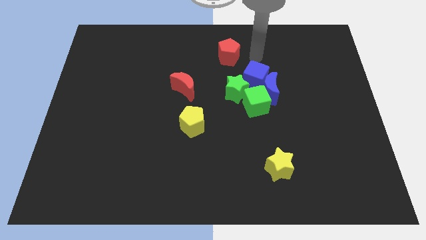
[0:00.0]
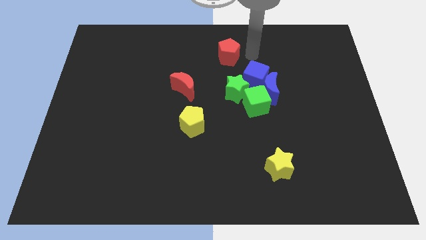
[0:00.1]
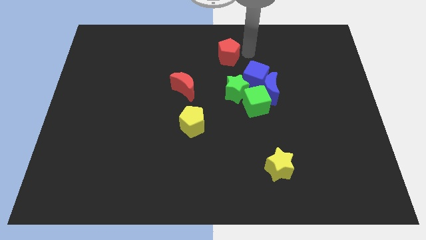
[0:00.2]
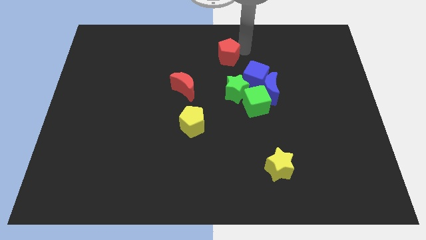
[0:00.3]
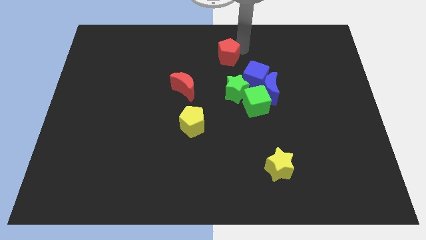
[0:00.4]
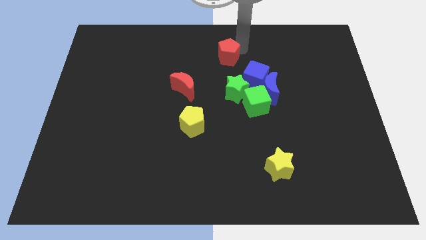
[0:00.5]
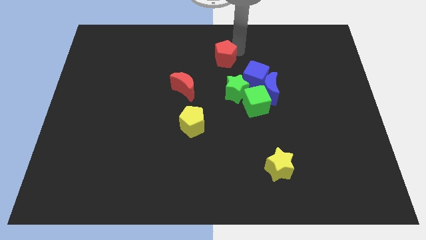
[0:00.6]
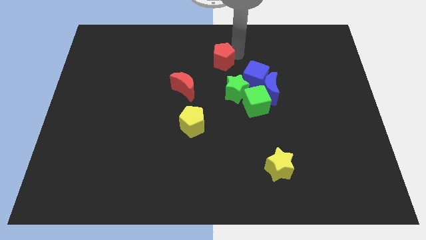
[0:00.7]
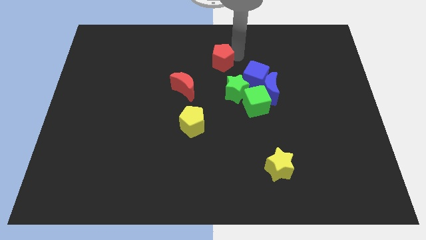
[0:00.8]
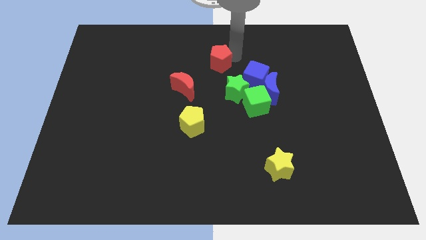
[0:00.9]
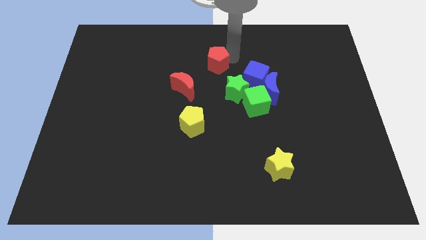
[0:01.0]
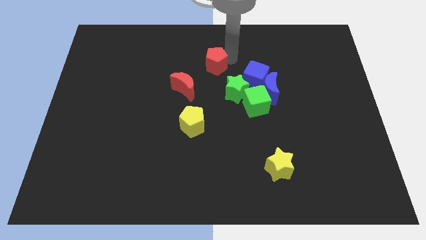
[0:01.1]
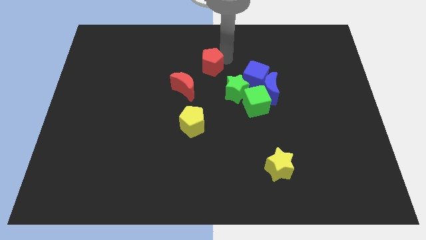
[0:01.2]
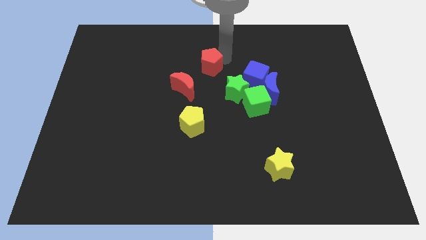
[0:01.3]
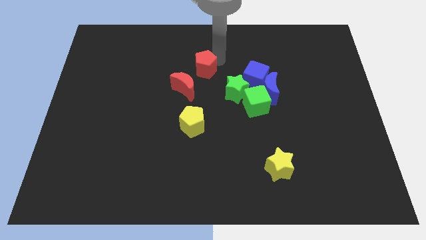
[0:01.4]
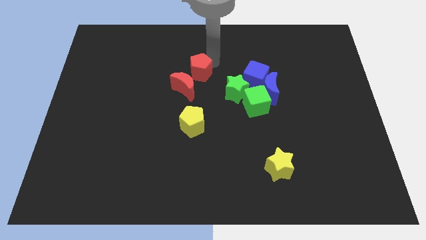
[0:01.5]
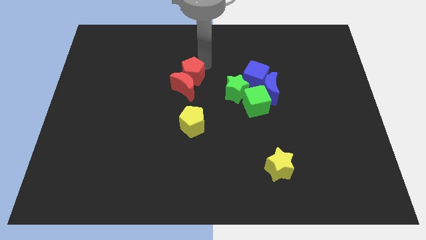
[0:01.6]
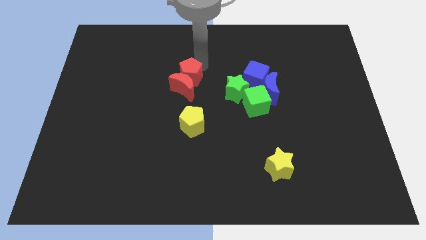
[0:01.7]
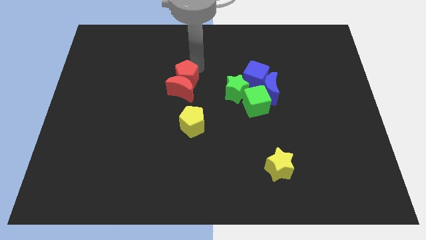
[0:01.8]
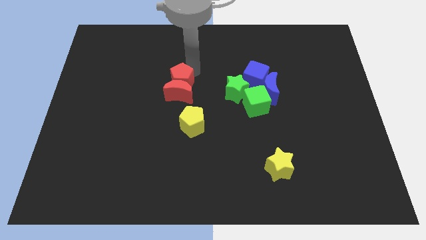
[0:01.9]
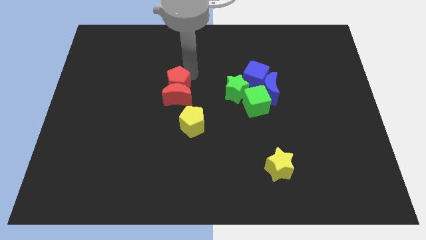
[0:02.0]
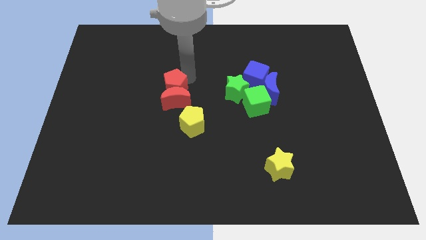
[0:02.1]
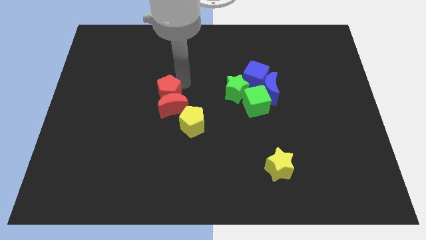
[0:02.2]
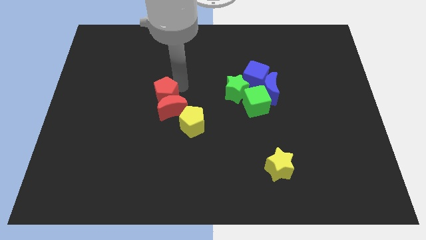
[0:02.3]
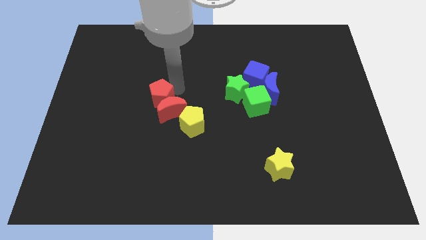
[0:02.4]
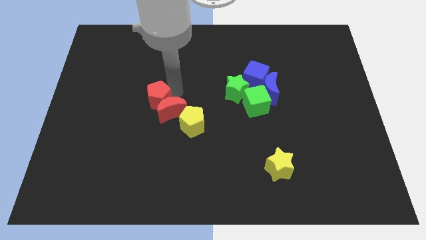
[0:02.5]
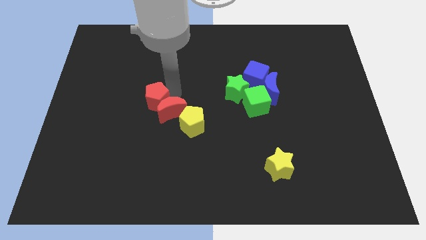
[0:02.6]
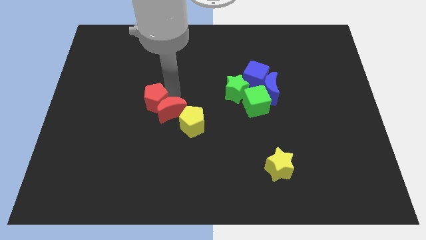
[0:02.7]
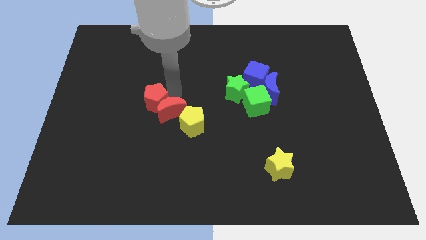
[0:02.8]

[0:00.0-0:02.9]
push the red pentagon into red crescent

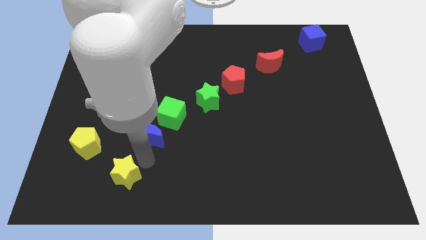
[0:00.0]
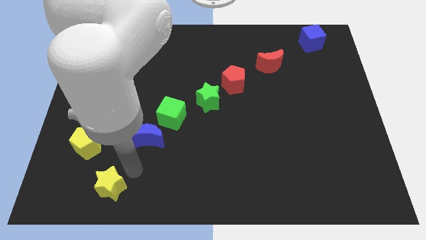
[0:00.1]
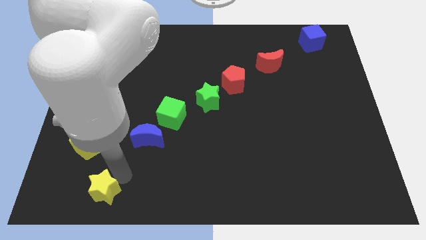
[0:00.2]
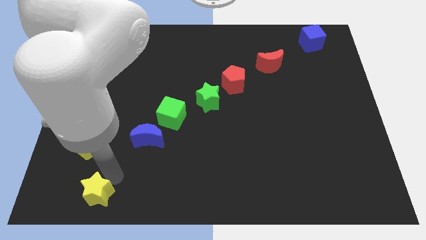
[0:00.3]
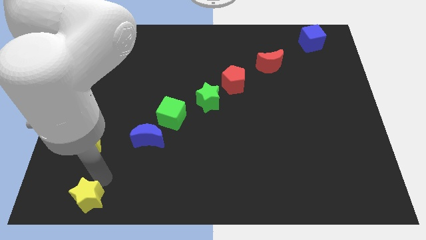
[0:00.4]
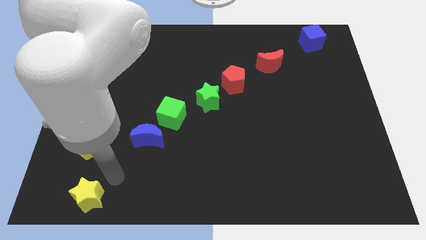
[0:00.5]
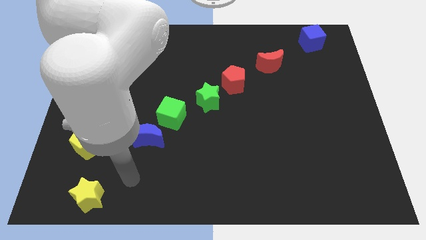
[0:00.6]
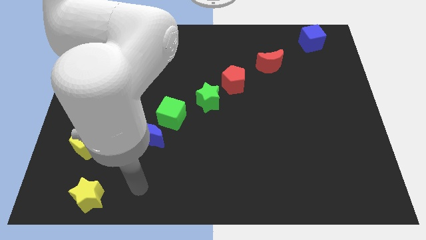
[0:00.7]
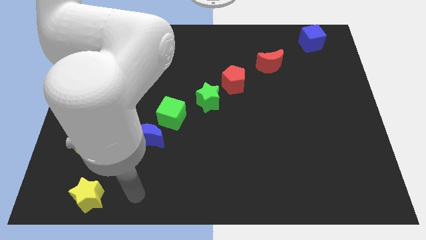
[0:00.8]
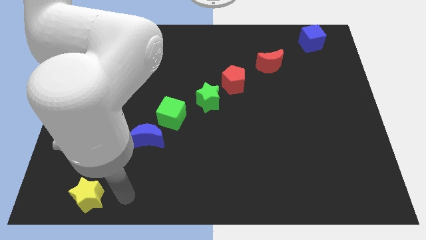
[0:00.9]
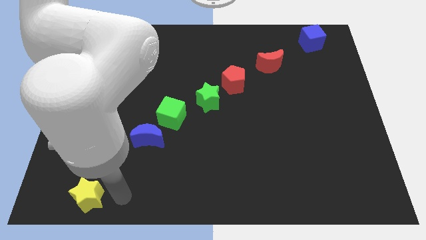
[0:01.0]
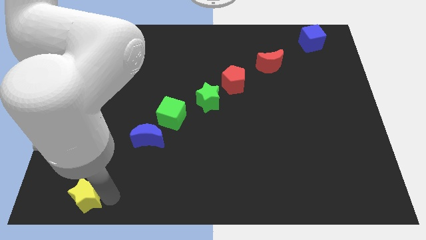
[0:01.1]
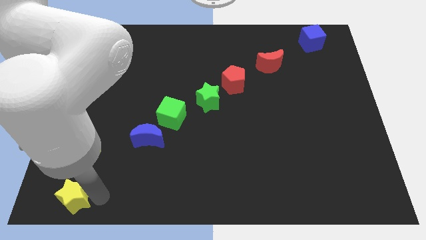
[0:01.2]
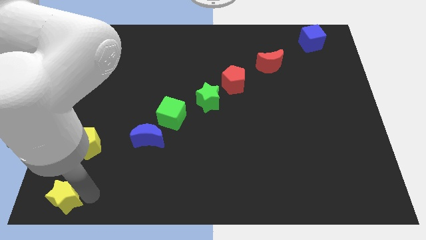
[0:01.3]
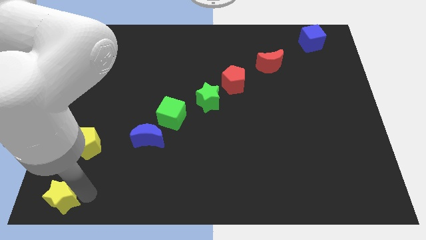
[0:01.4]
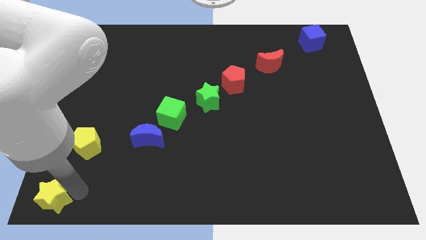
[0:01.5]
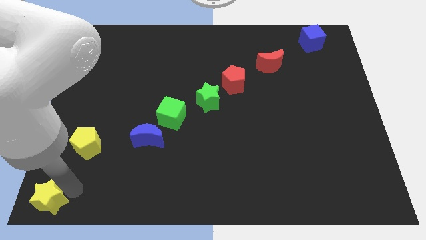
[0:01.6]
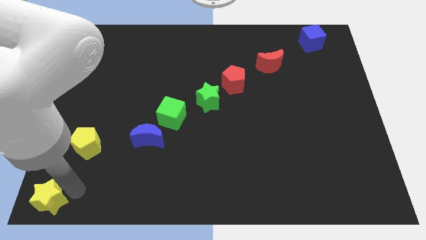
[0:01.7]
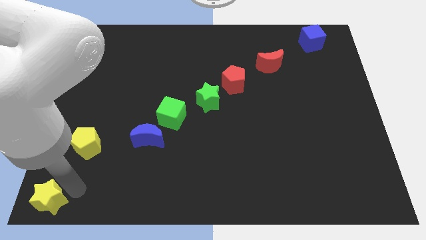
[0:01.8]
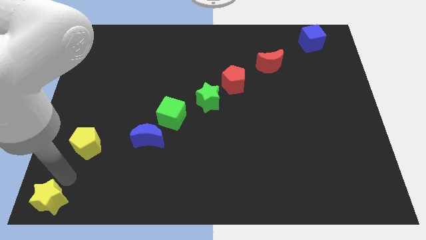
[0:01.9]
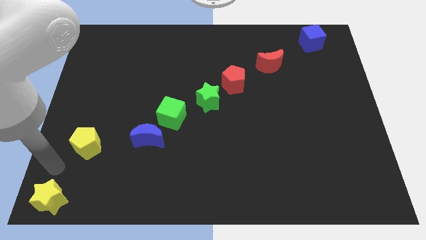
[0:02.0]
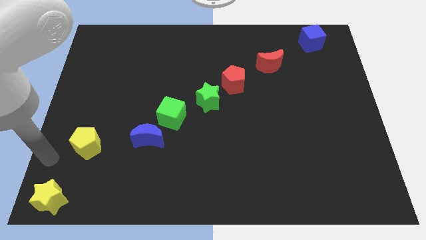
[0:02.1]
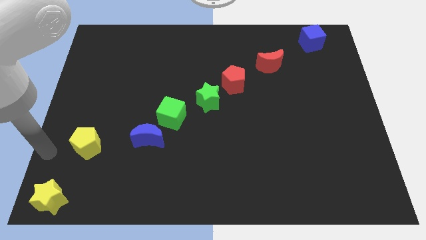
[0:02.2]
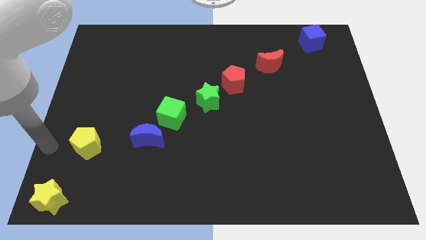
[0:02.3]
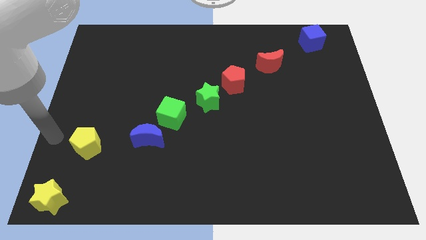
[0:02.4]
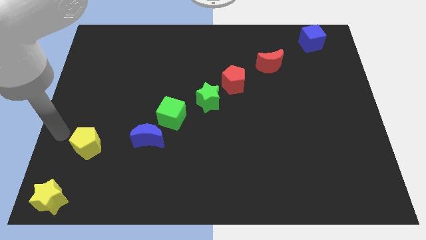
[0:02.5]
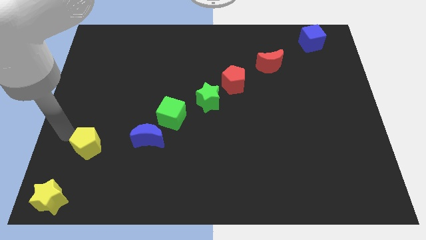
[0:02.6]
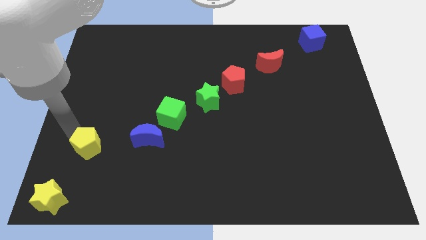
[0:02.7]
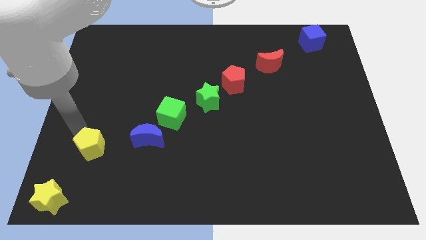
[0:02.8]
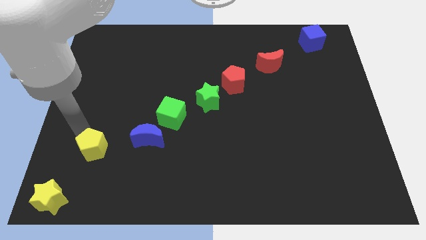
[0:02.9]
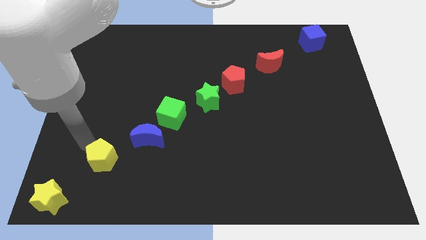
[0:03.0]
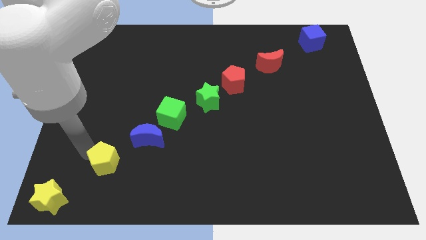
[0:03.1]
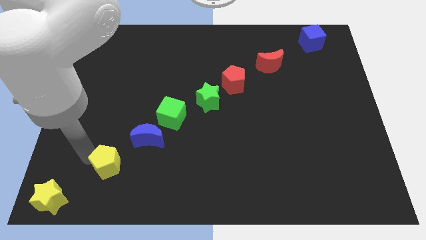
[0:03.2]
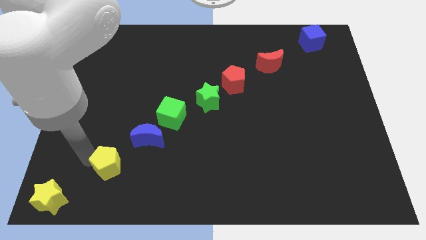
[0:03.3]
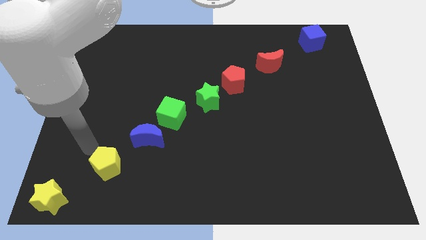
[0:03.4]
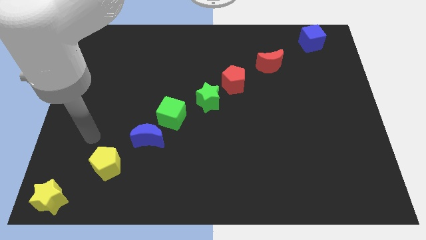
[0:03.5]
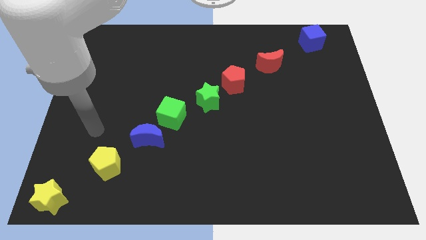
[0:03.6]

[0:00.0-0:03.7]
adjust the yellow blocks to form a diagonal line

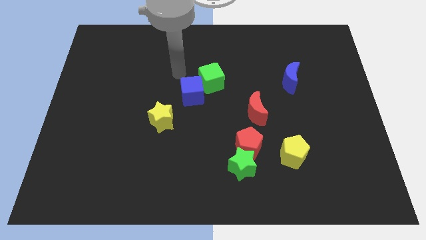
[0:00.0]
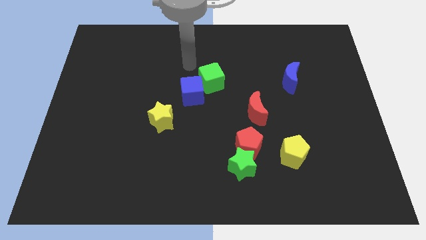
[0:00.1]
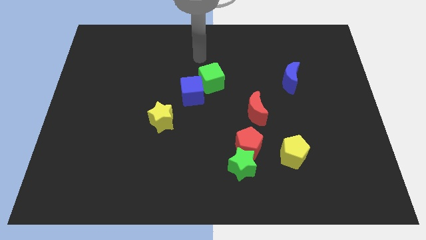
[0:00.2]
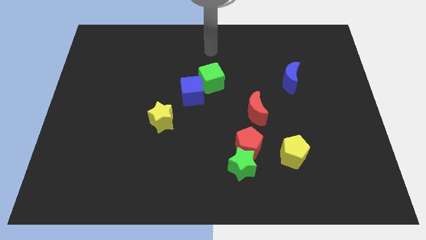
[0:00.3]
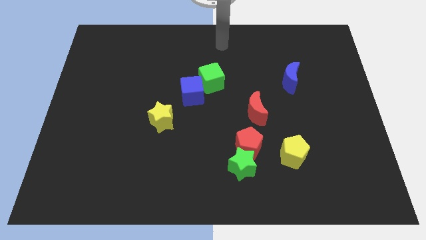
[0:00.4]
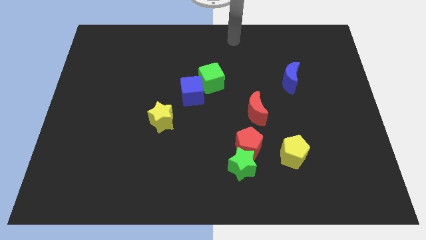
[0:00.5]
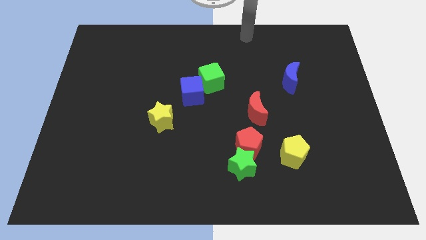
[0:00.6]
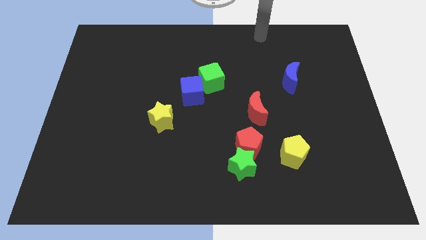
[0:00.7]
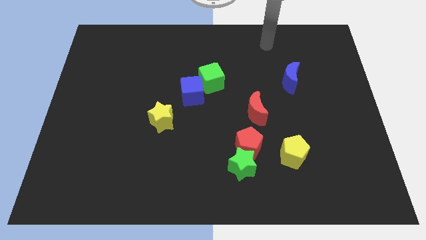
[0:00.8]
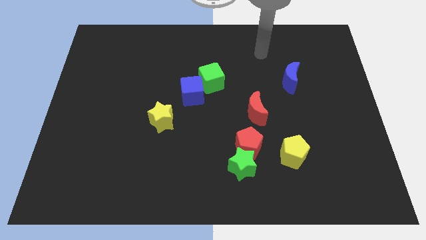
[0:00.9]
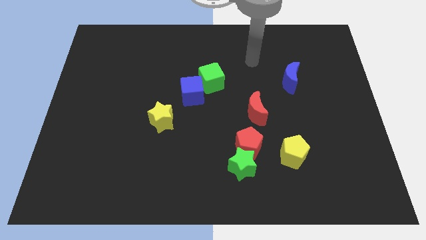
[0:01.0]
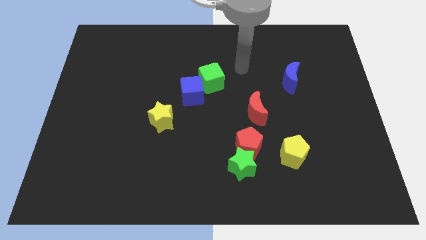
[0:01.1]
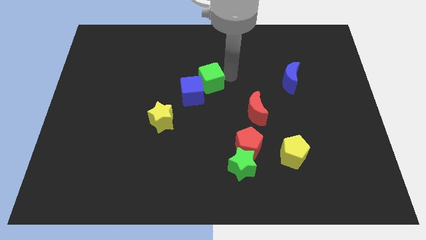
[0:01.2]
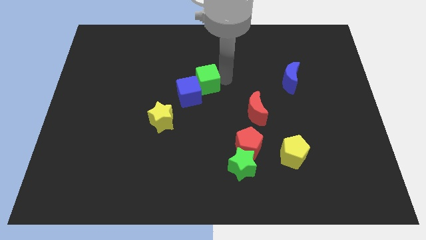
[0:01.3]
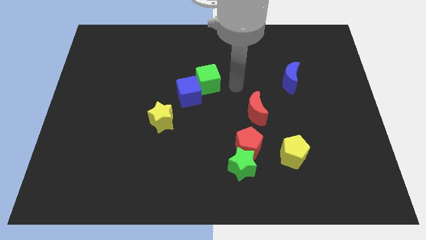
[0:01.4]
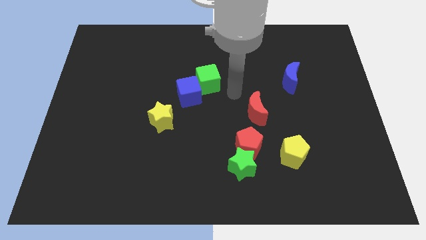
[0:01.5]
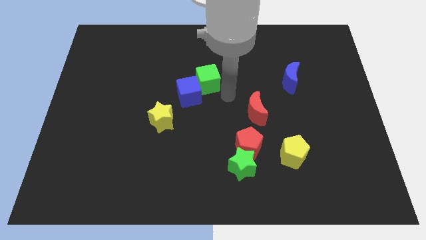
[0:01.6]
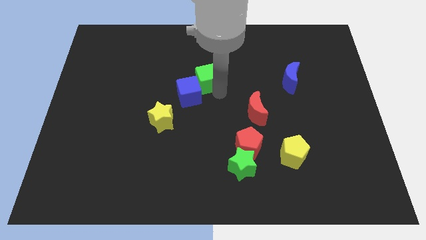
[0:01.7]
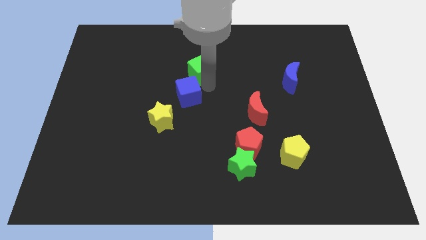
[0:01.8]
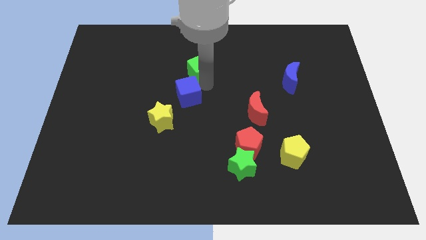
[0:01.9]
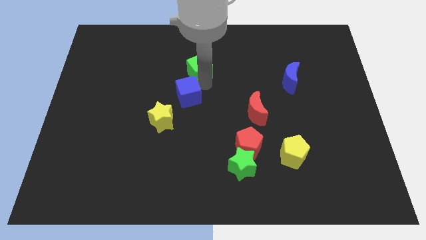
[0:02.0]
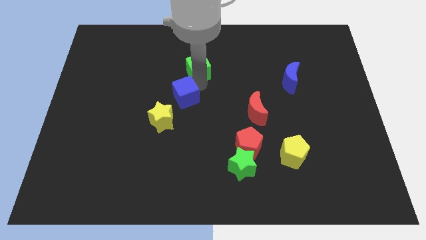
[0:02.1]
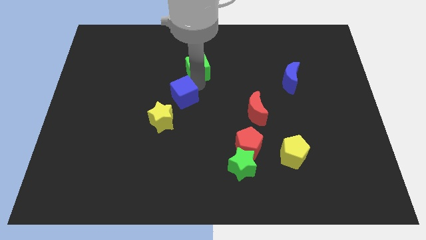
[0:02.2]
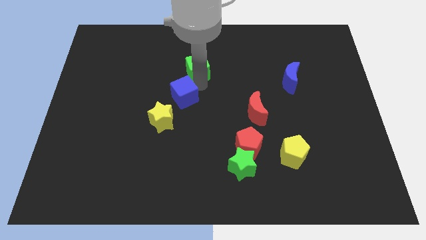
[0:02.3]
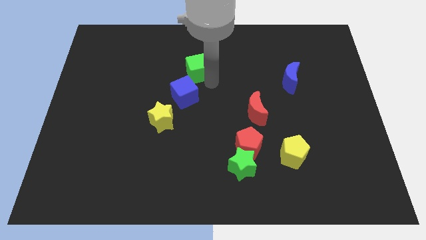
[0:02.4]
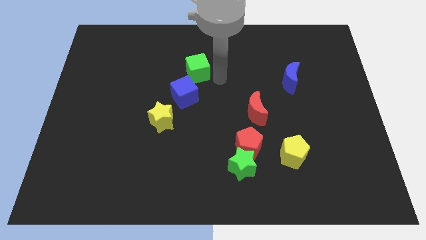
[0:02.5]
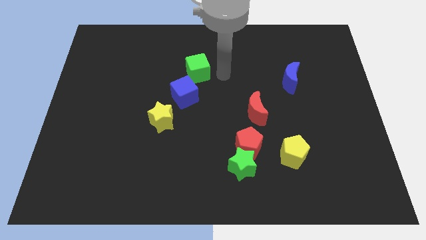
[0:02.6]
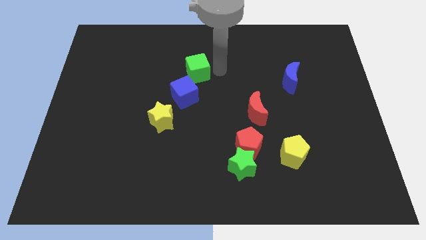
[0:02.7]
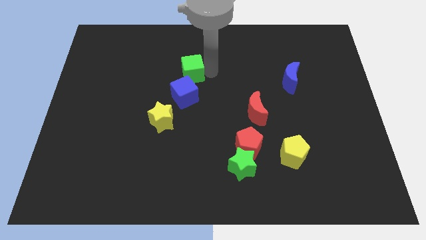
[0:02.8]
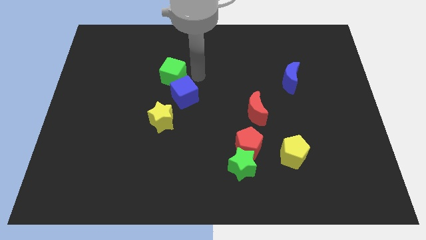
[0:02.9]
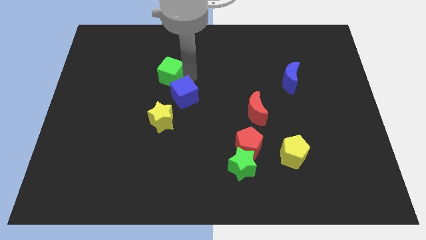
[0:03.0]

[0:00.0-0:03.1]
slide green cube slightly to the left
